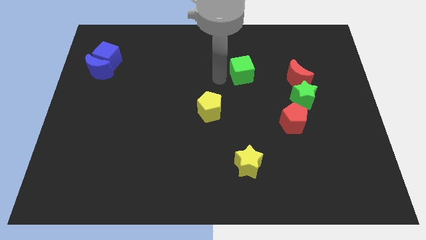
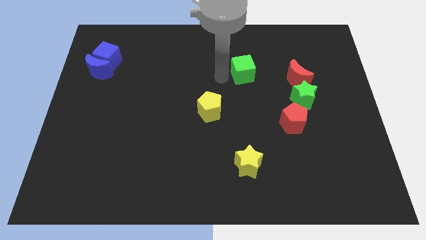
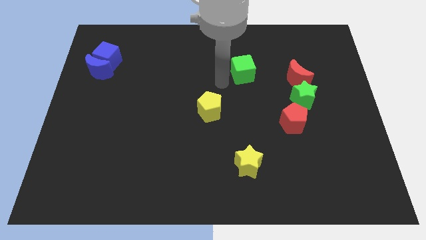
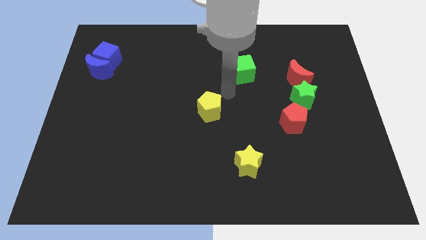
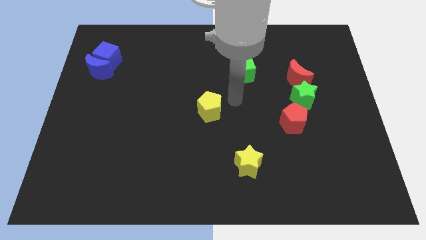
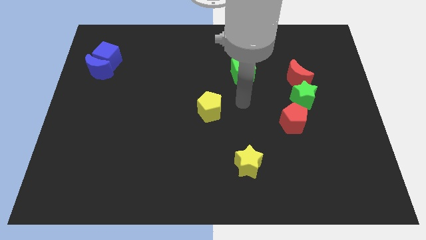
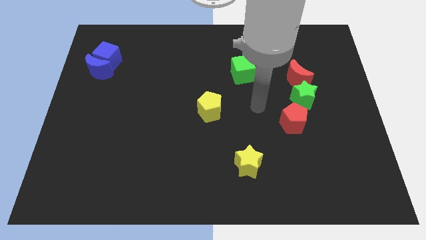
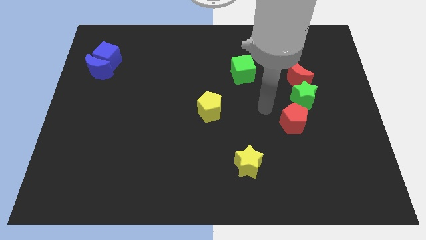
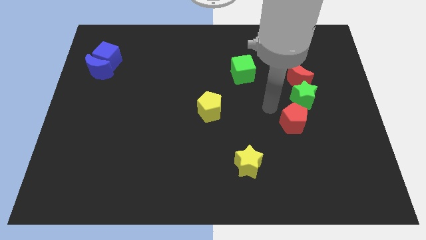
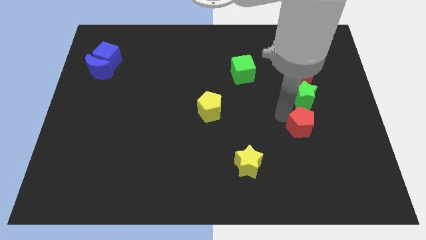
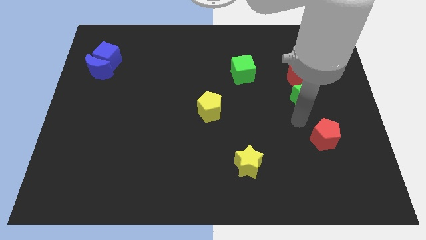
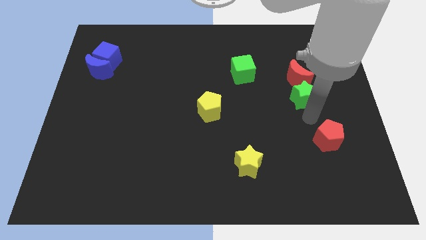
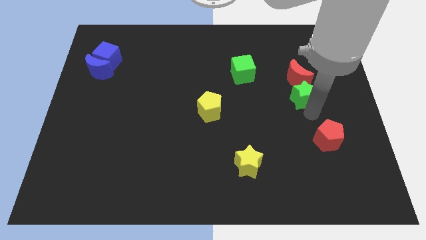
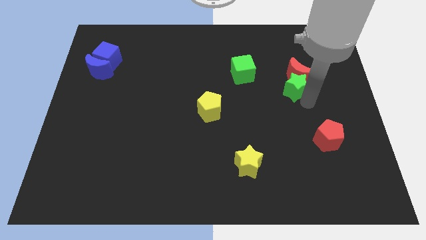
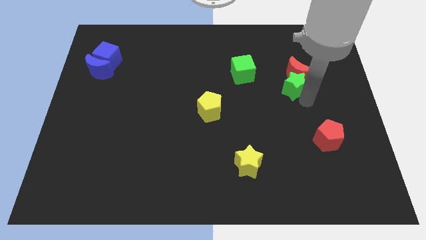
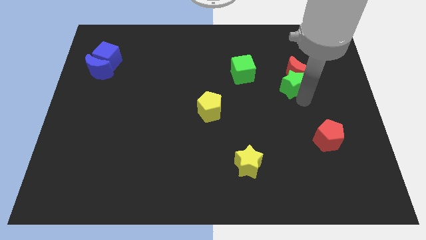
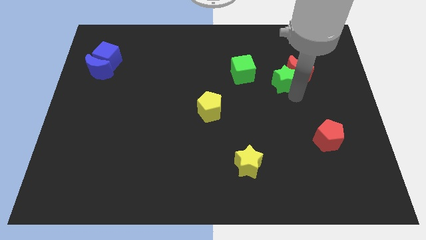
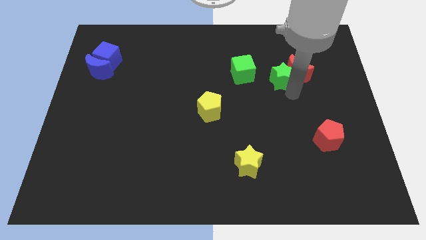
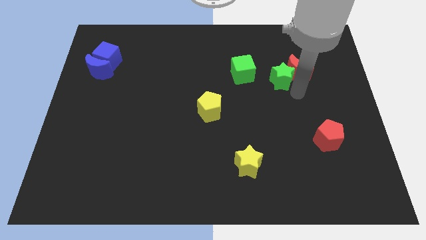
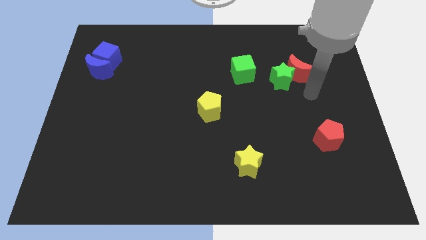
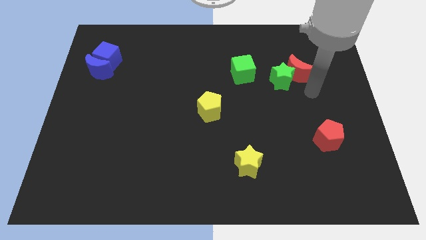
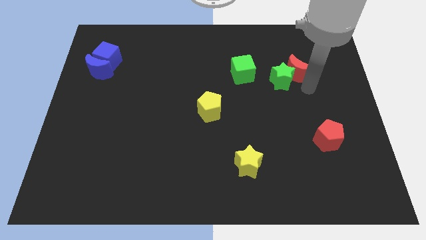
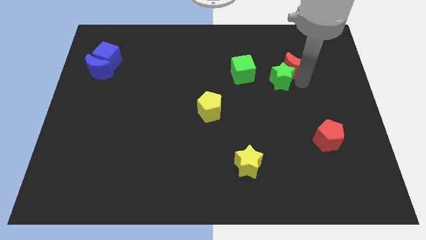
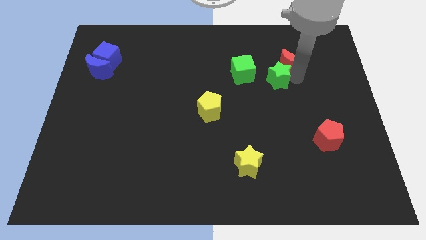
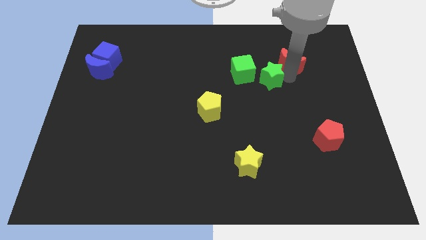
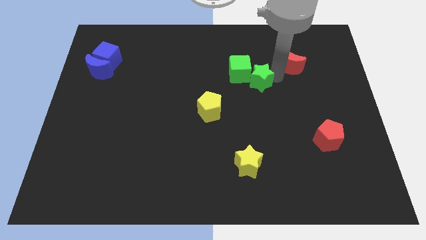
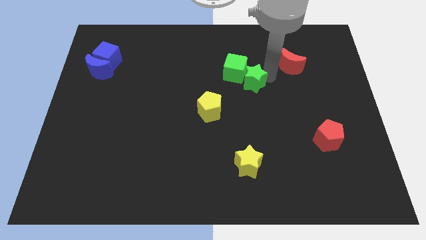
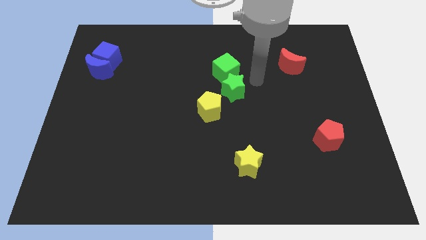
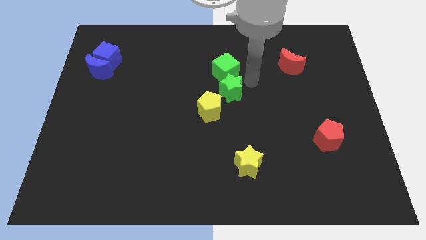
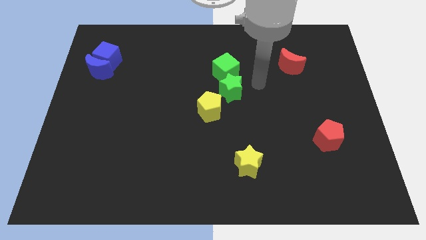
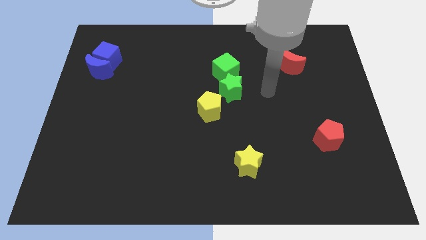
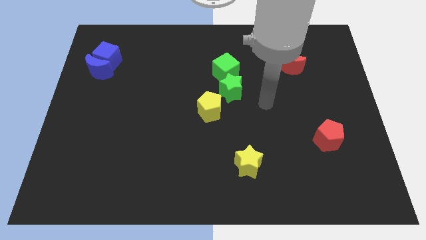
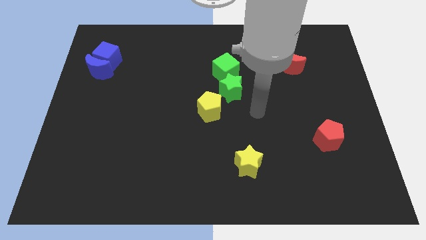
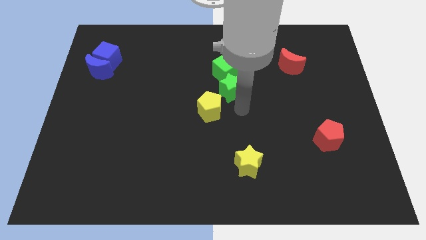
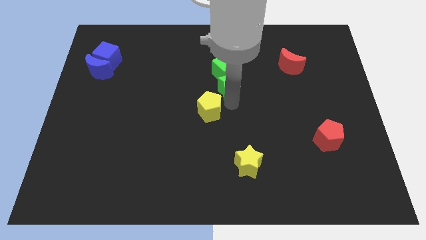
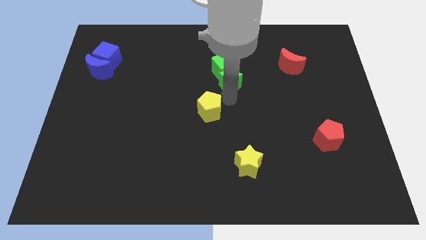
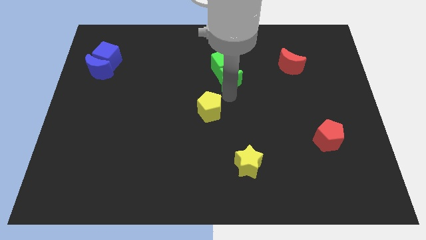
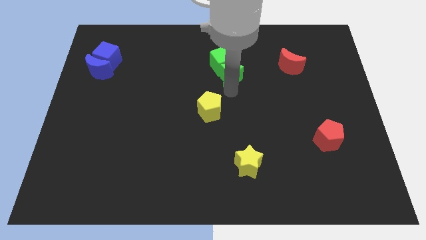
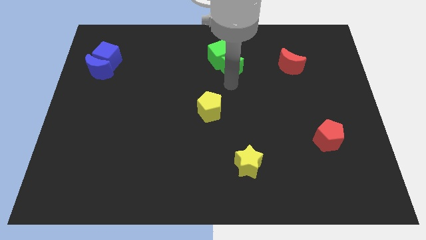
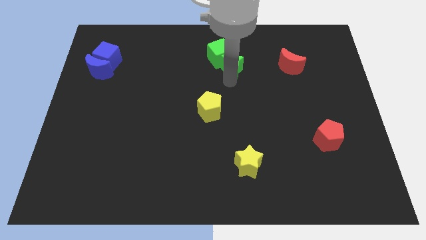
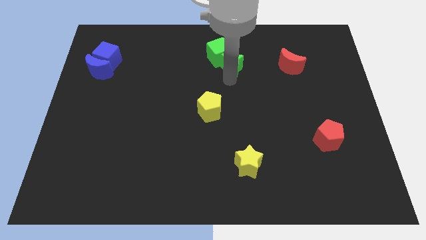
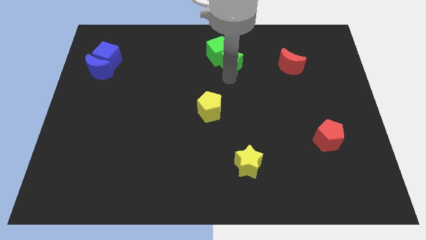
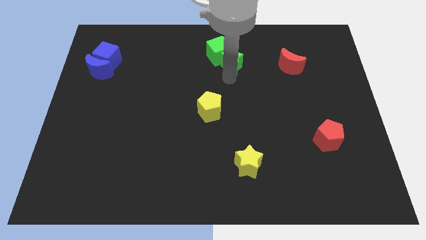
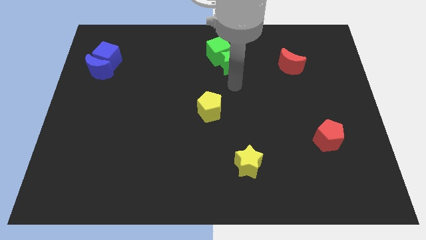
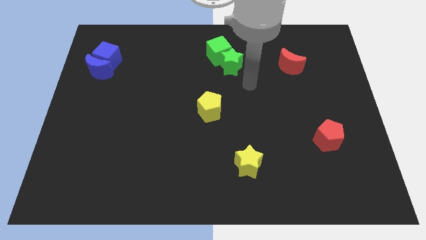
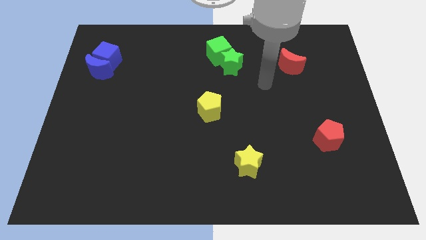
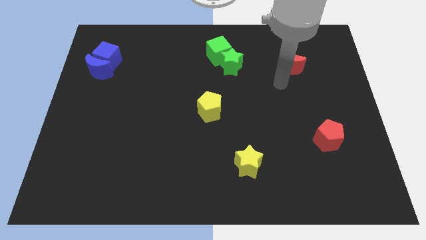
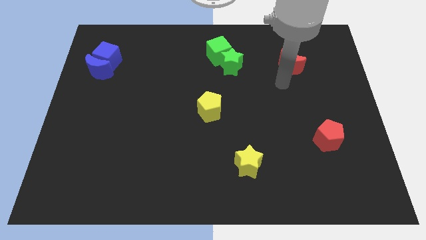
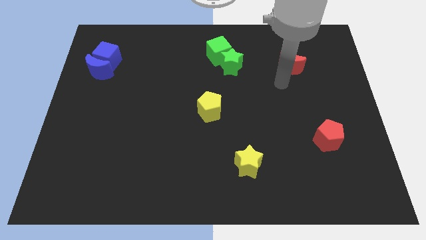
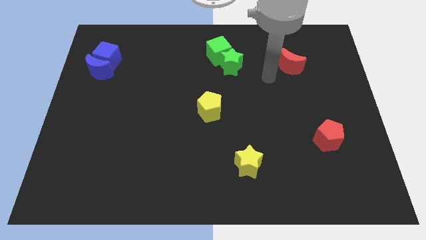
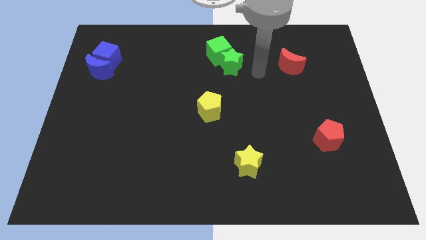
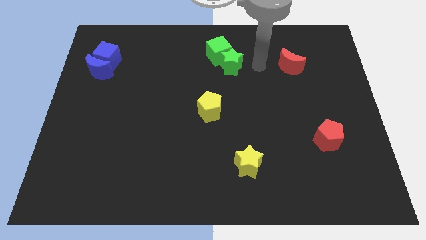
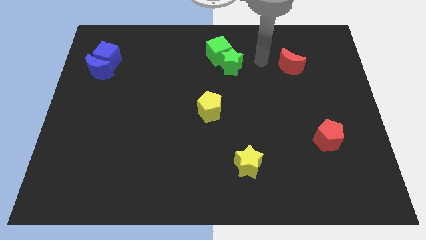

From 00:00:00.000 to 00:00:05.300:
place the green star to the bottom of the green cube

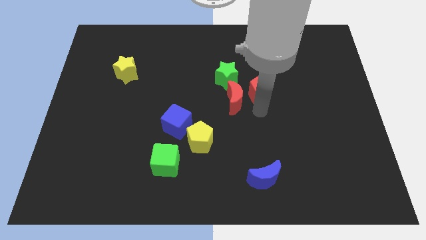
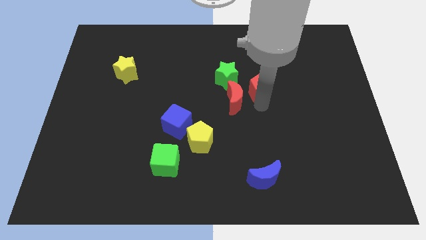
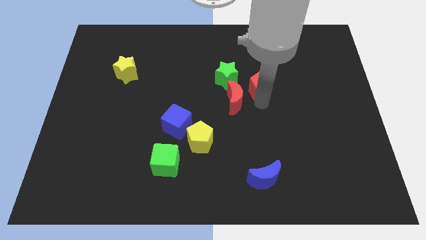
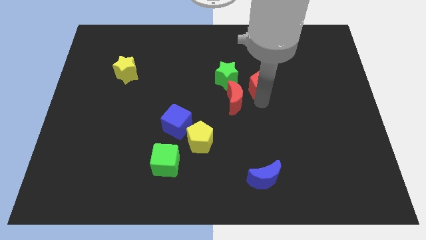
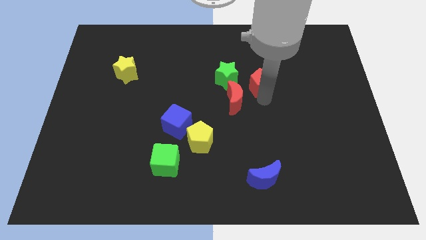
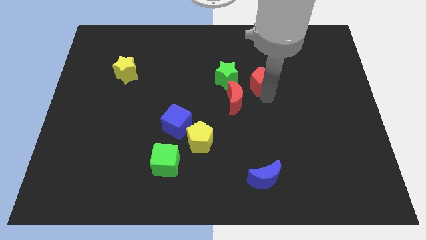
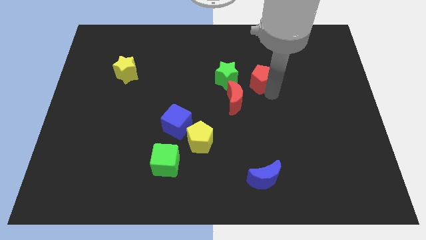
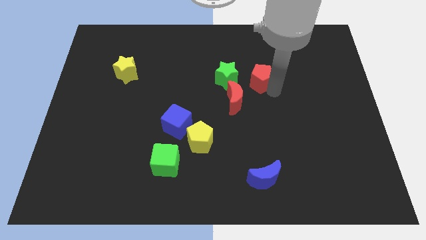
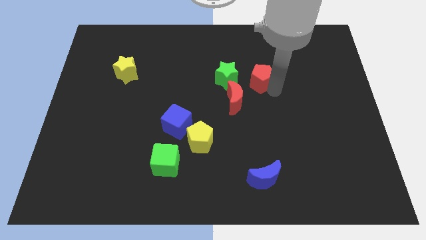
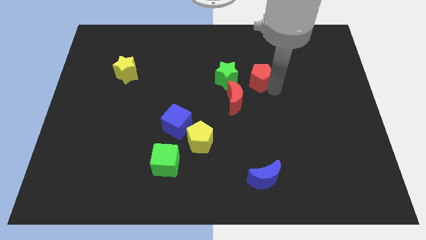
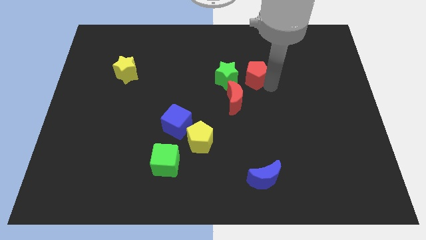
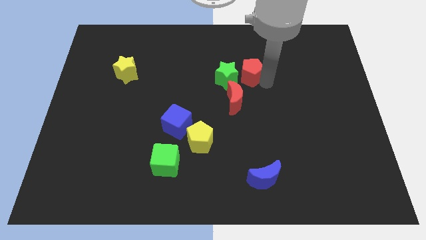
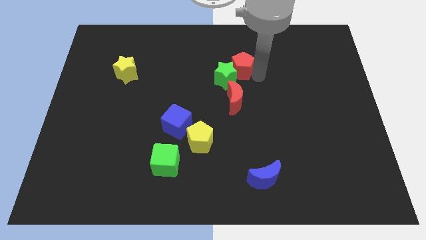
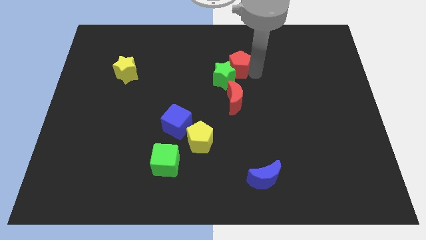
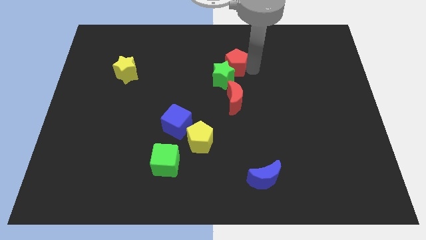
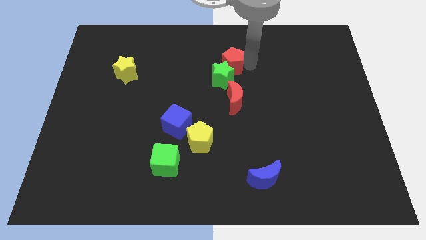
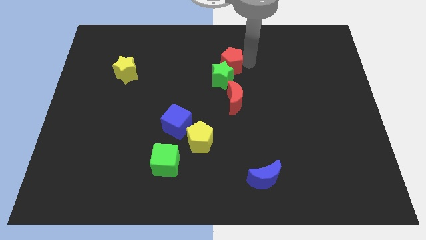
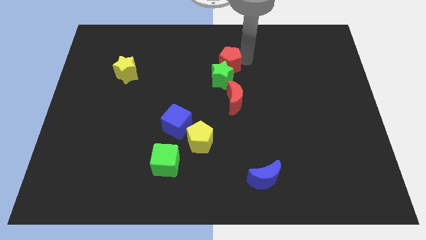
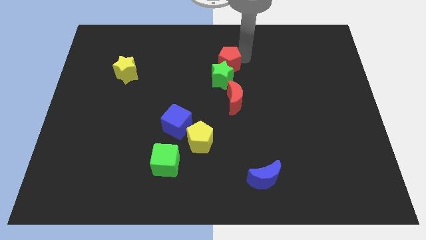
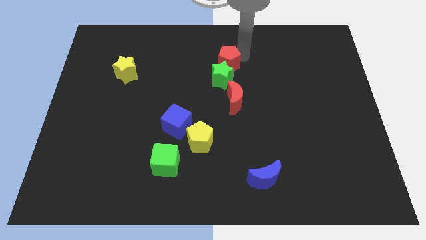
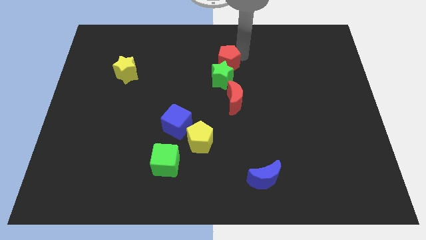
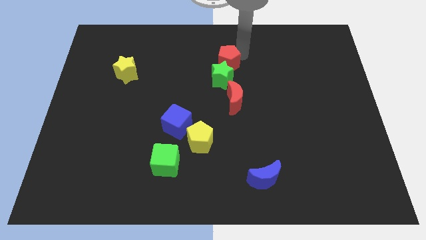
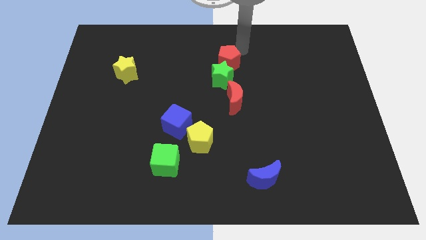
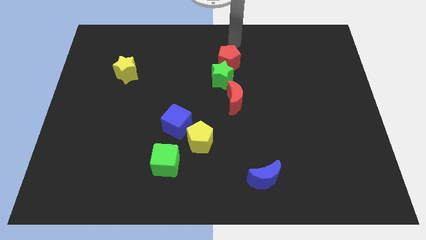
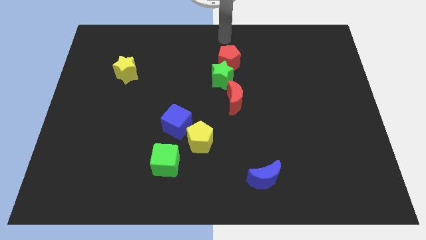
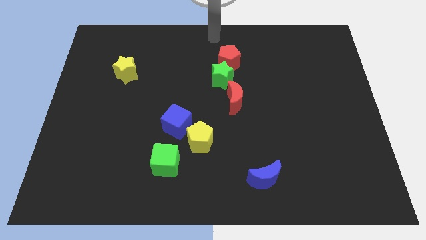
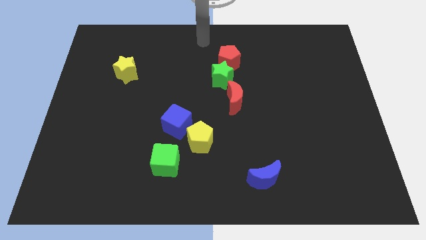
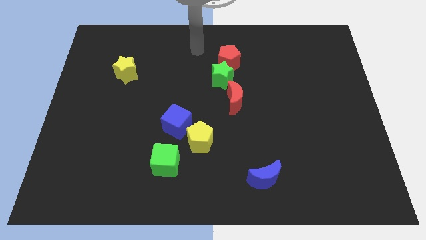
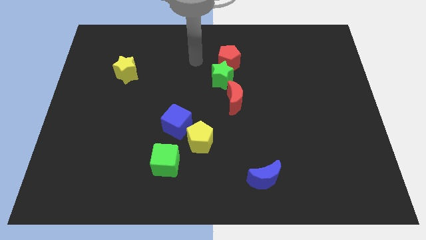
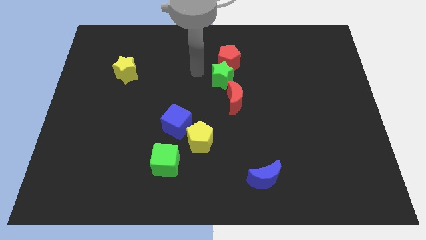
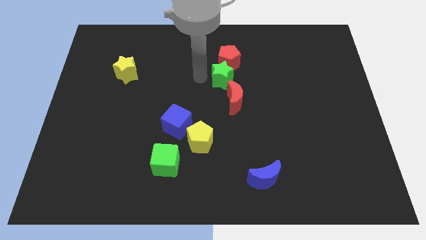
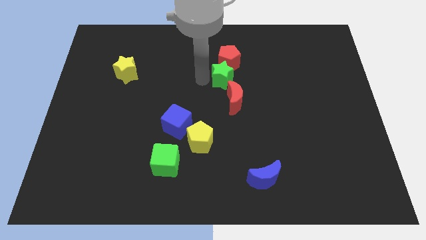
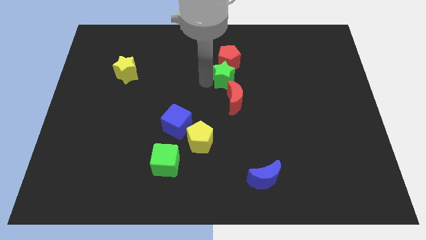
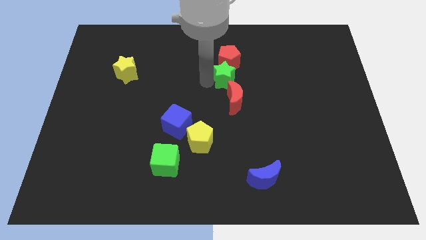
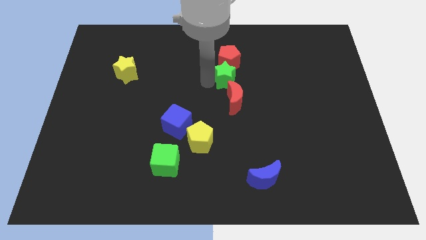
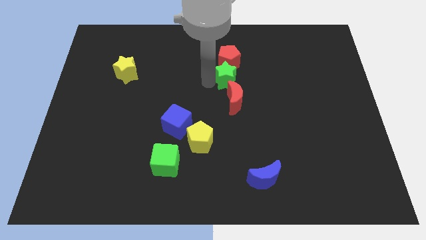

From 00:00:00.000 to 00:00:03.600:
push red pentagon above green star
